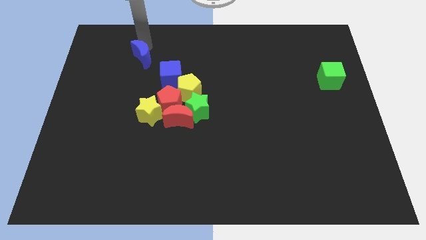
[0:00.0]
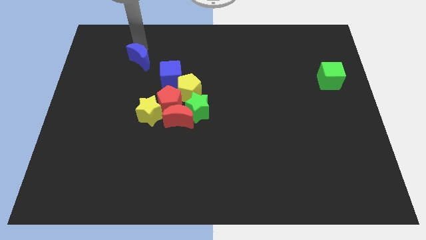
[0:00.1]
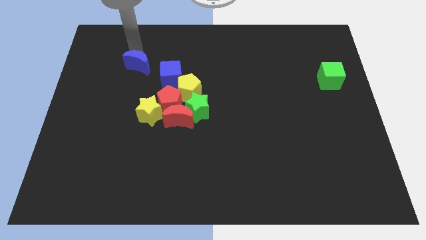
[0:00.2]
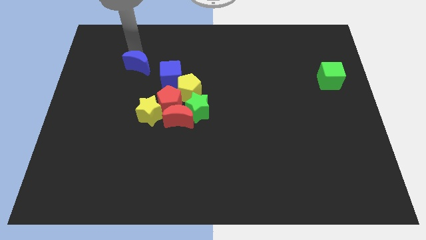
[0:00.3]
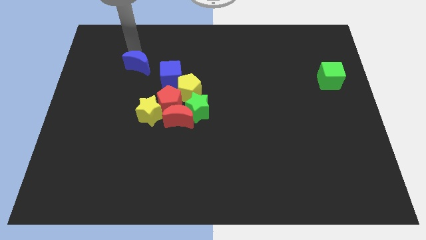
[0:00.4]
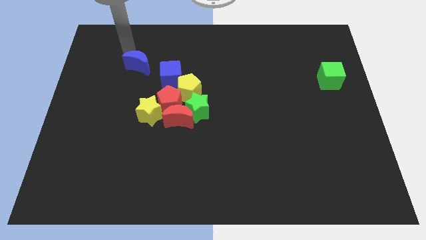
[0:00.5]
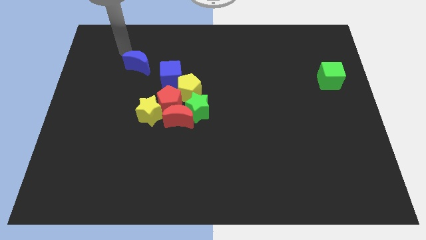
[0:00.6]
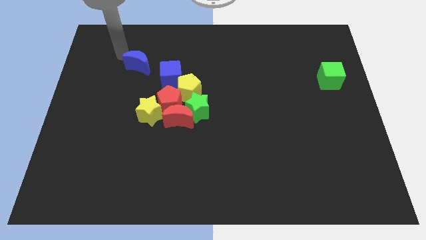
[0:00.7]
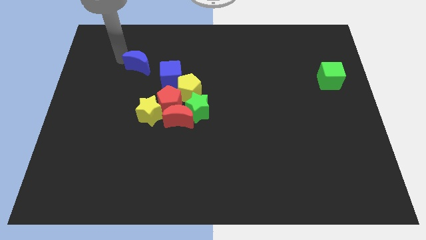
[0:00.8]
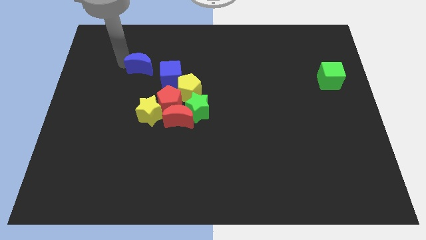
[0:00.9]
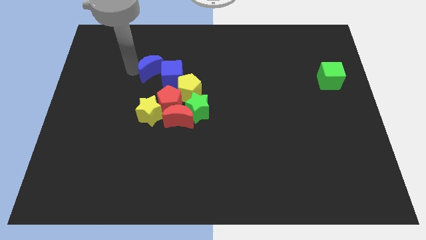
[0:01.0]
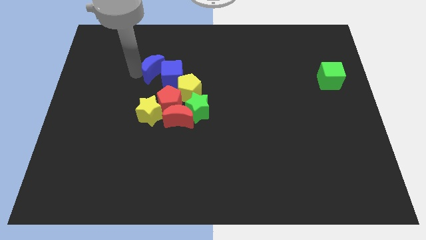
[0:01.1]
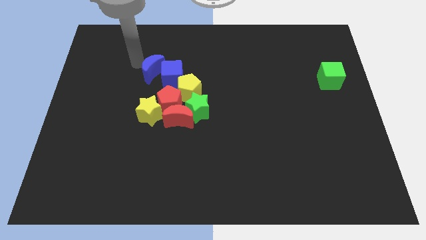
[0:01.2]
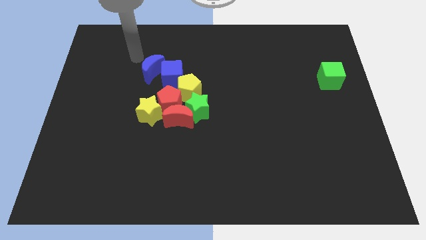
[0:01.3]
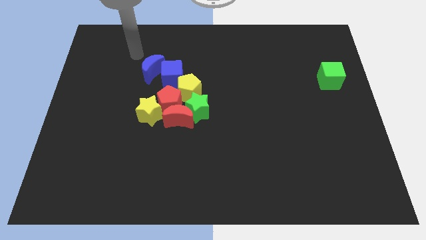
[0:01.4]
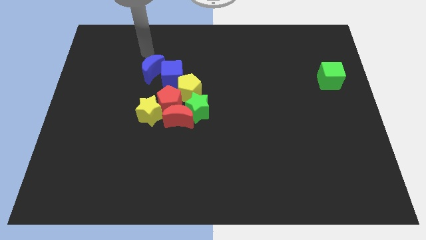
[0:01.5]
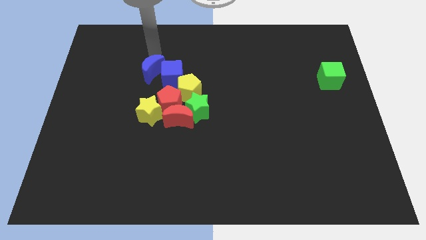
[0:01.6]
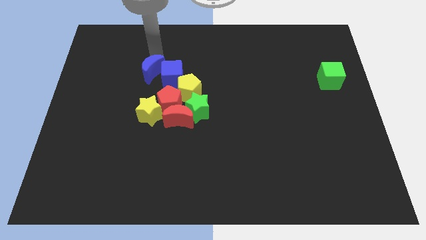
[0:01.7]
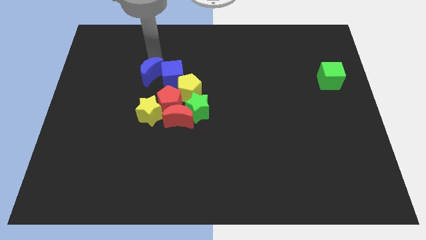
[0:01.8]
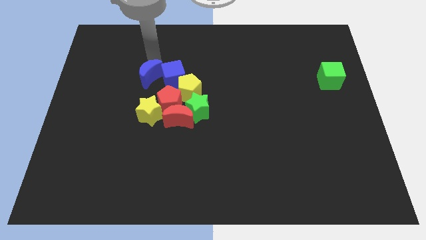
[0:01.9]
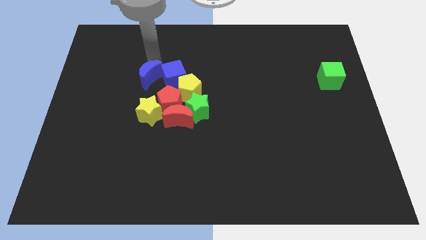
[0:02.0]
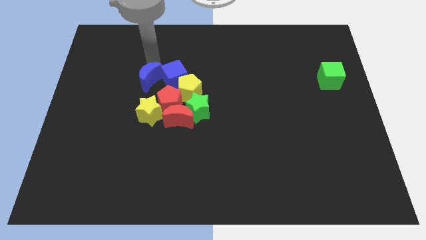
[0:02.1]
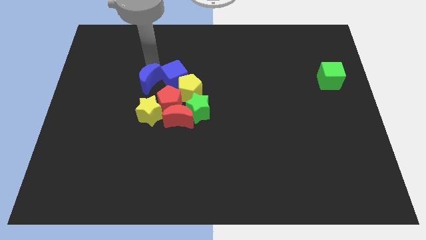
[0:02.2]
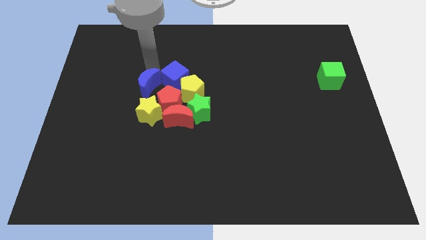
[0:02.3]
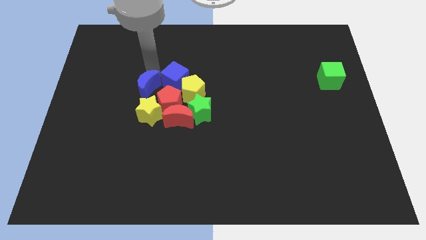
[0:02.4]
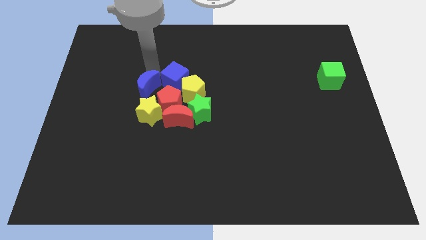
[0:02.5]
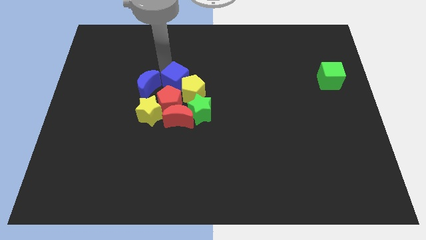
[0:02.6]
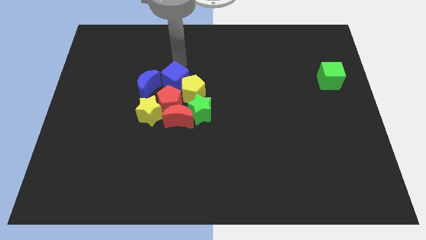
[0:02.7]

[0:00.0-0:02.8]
drag the blue moon close to the group of blocks

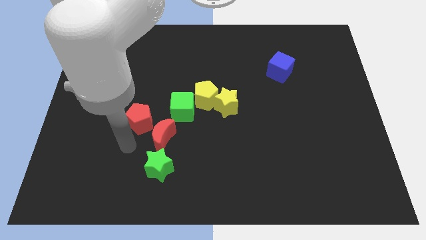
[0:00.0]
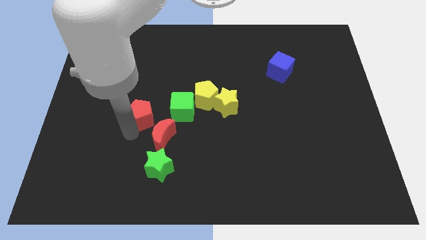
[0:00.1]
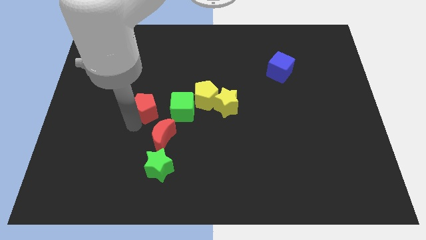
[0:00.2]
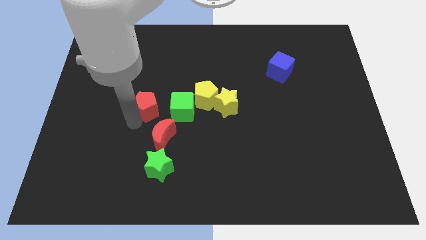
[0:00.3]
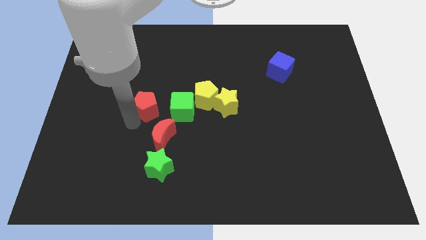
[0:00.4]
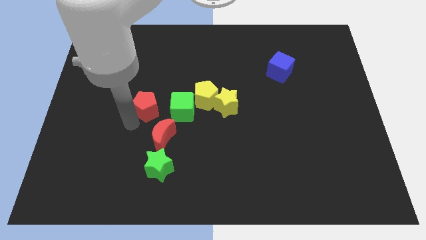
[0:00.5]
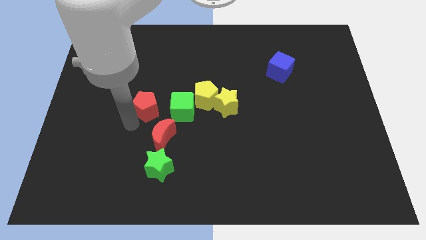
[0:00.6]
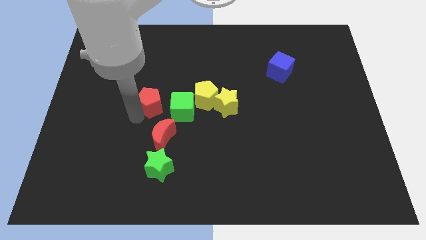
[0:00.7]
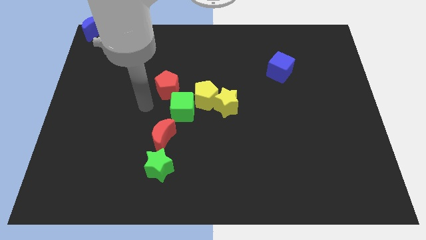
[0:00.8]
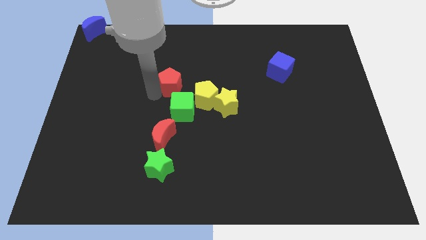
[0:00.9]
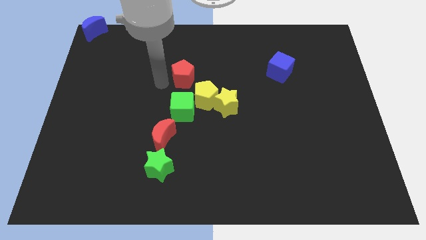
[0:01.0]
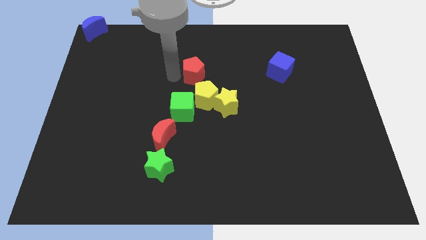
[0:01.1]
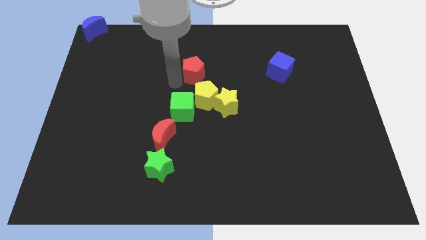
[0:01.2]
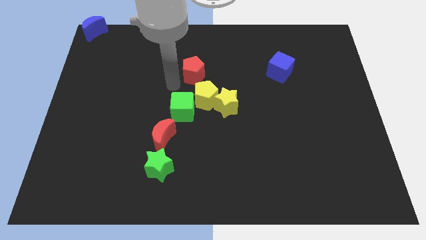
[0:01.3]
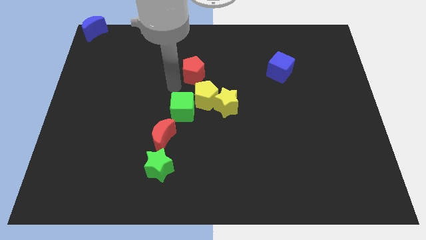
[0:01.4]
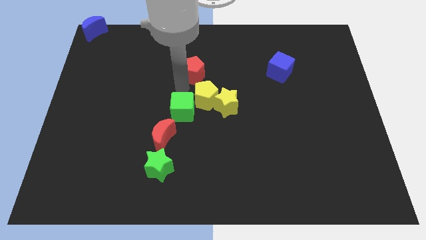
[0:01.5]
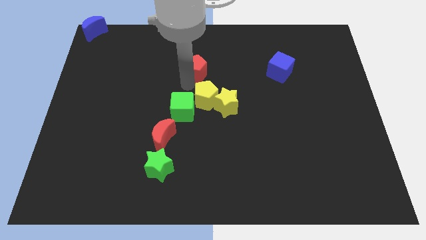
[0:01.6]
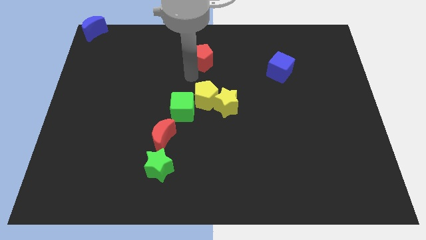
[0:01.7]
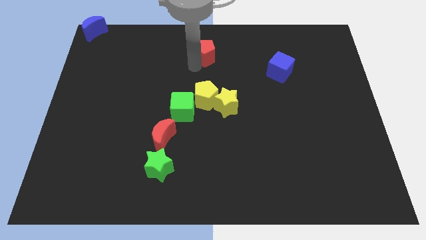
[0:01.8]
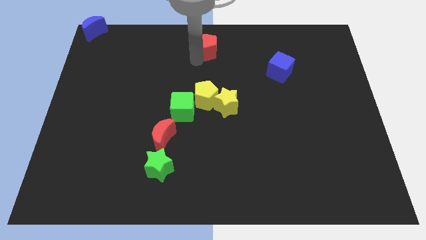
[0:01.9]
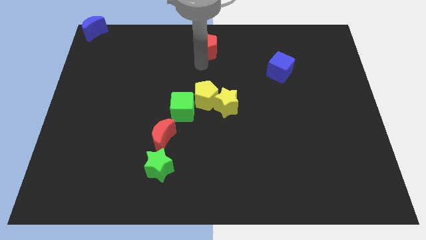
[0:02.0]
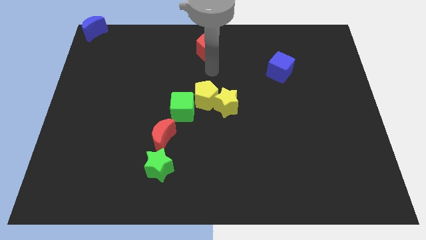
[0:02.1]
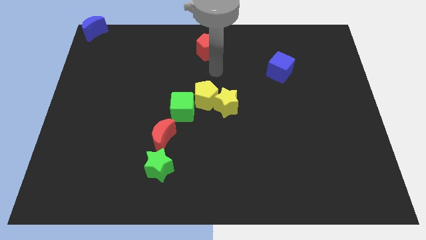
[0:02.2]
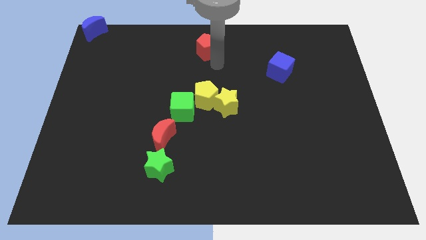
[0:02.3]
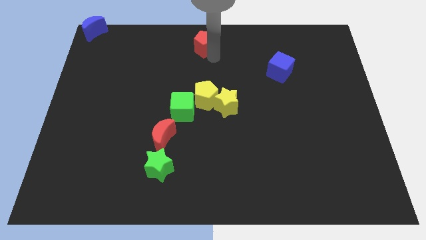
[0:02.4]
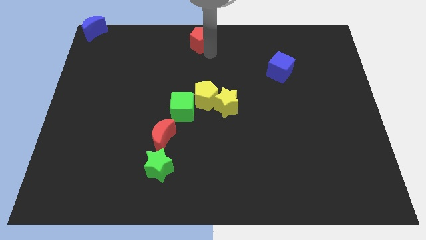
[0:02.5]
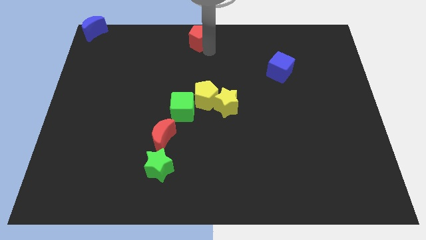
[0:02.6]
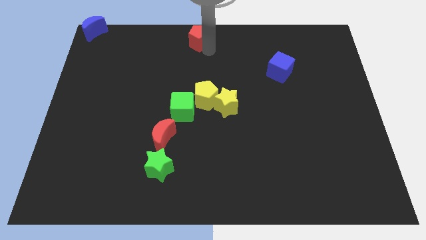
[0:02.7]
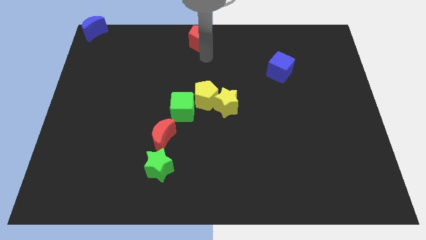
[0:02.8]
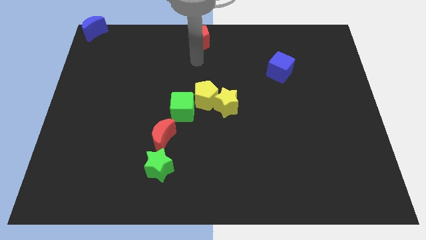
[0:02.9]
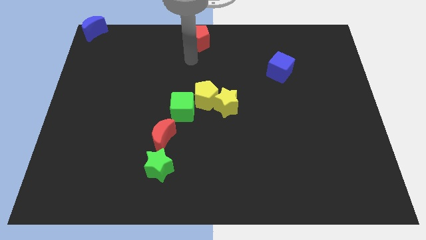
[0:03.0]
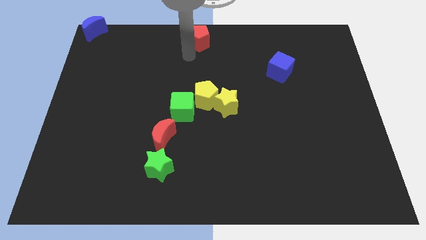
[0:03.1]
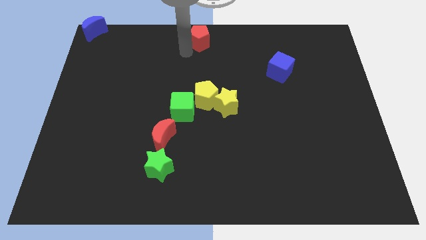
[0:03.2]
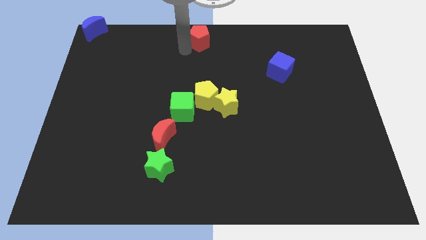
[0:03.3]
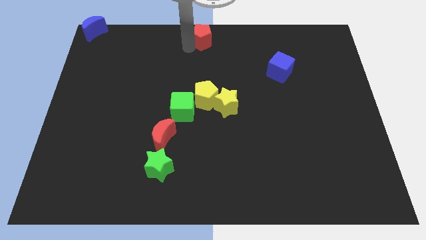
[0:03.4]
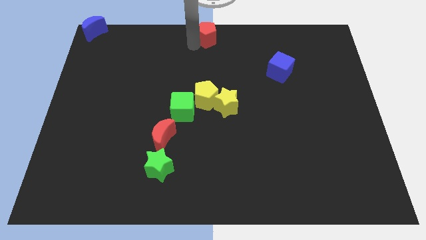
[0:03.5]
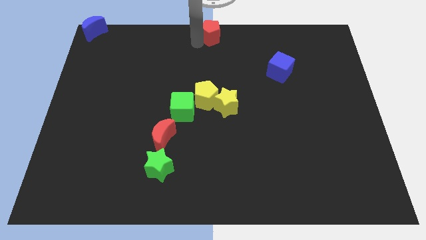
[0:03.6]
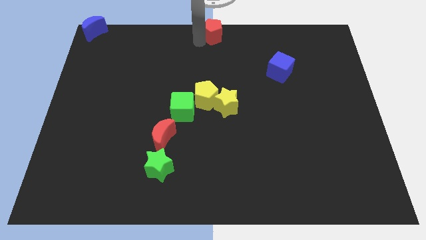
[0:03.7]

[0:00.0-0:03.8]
push the red pentagon to the top center of the board

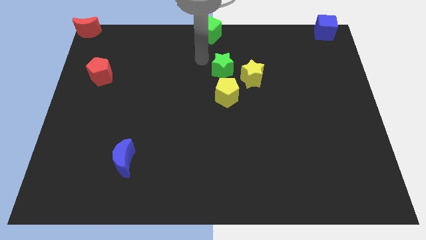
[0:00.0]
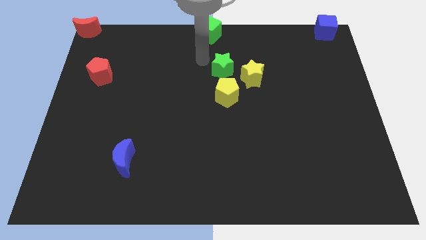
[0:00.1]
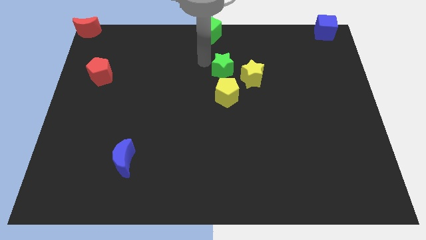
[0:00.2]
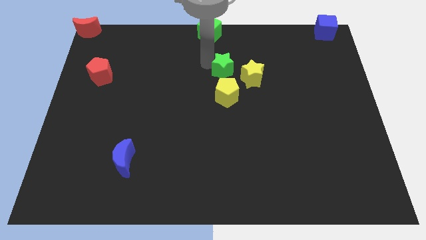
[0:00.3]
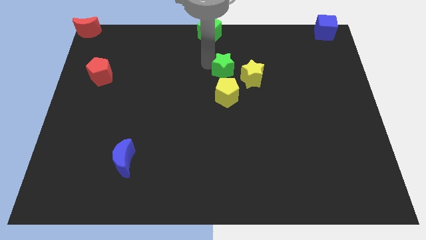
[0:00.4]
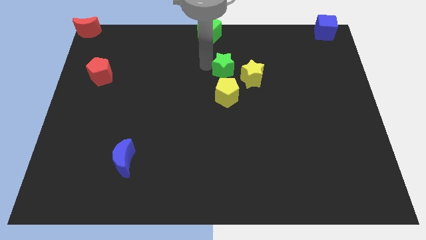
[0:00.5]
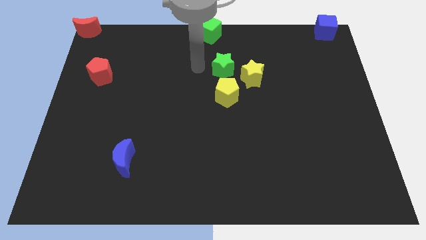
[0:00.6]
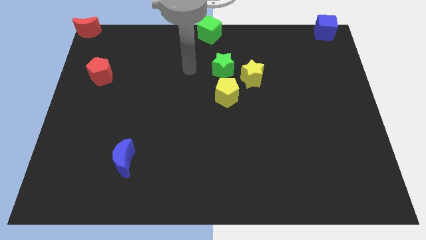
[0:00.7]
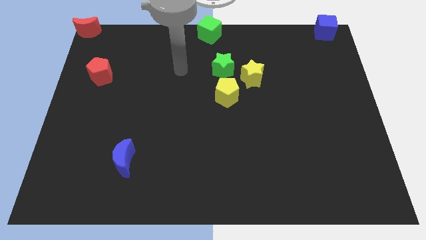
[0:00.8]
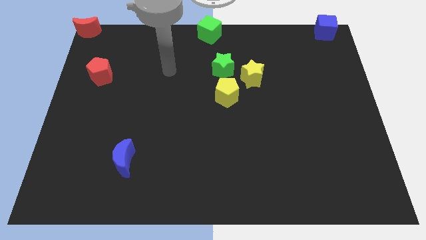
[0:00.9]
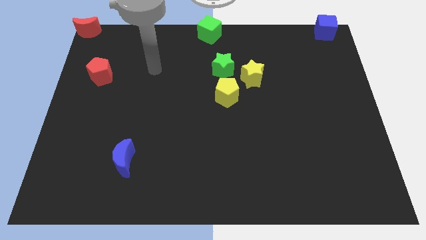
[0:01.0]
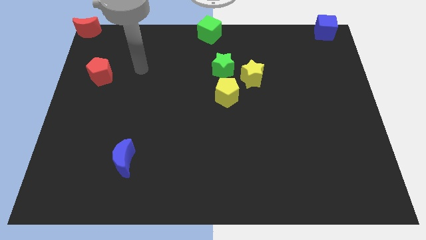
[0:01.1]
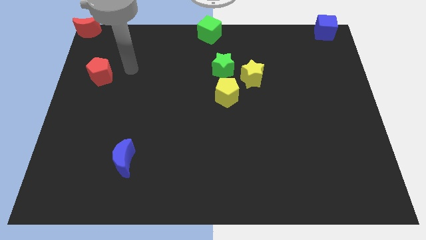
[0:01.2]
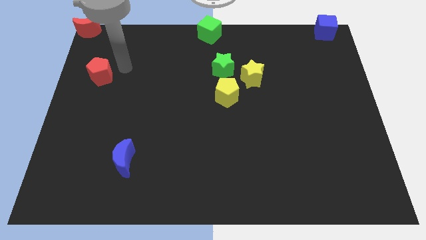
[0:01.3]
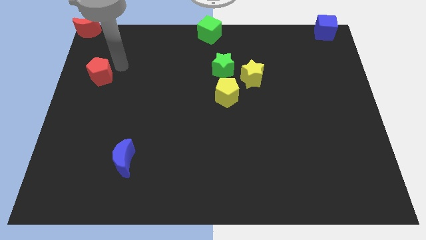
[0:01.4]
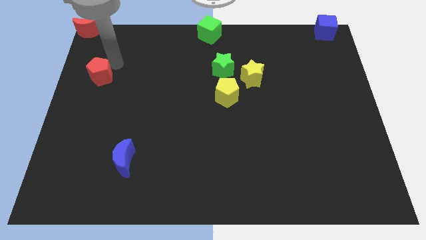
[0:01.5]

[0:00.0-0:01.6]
place your arm close to the red pentagon

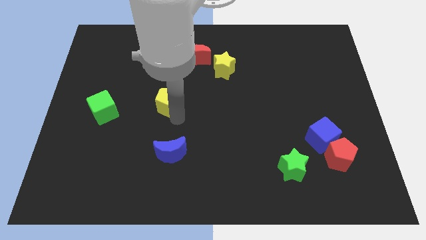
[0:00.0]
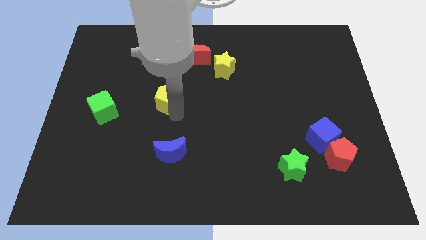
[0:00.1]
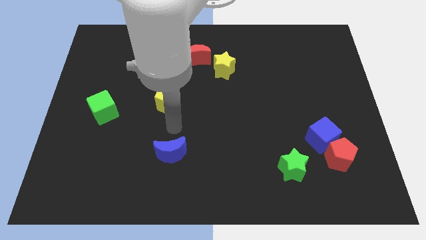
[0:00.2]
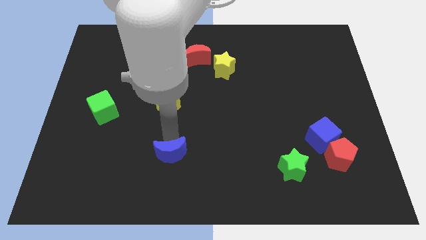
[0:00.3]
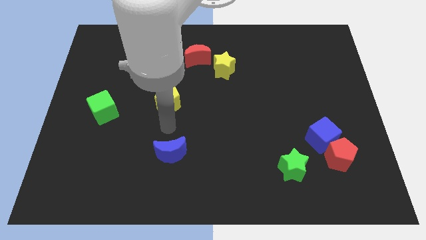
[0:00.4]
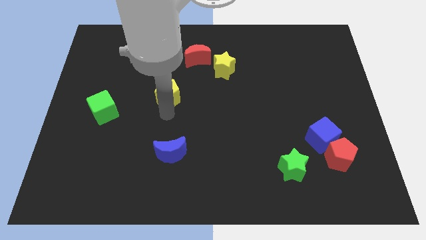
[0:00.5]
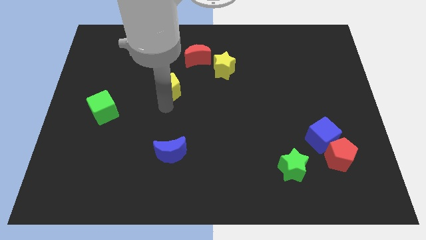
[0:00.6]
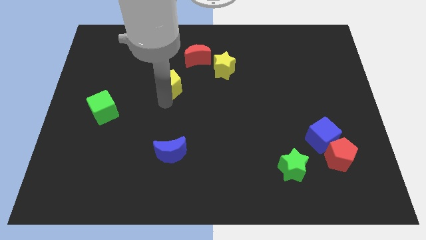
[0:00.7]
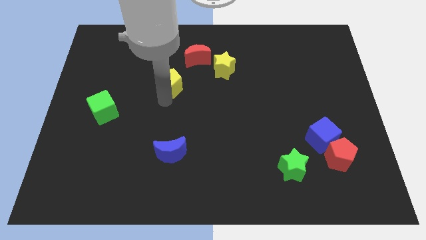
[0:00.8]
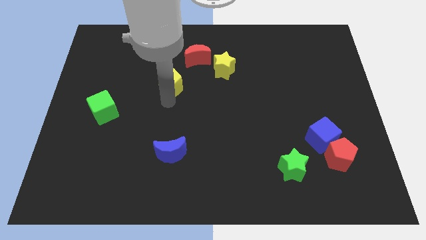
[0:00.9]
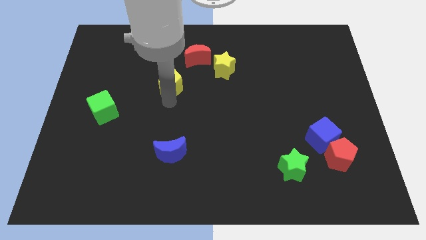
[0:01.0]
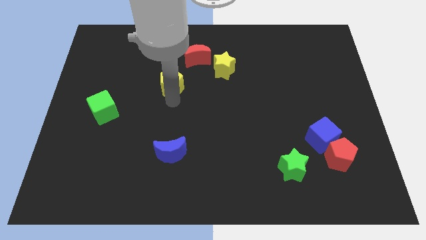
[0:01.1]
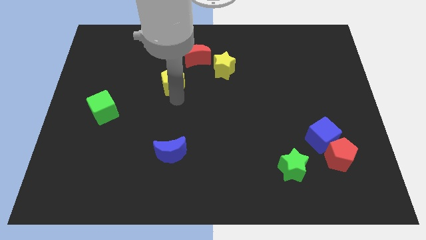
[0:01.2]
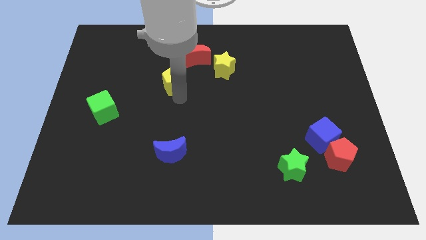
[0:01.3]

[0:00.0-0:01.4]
push the yellow pentagon slightly to the bottom left of red crescent
